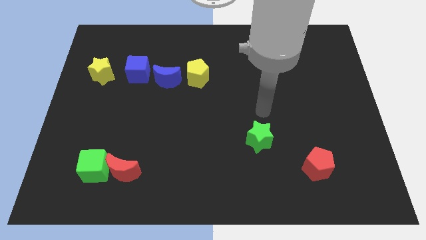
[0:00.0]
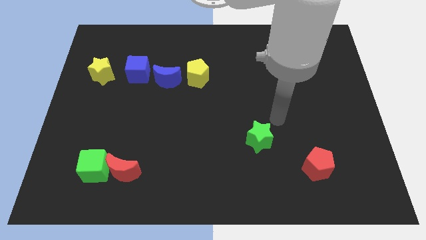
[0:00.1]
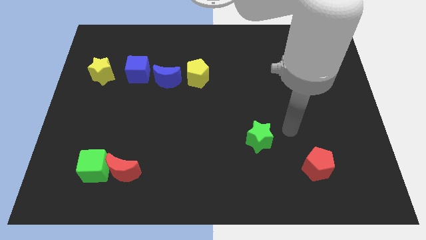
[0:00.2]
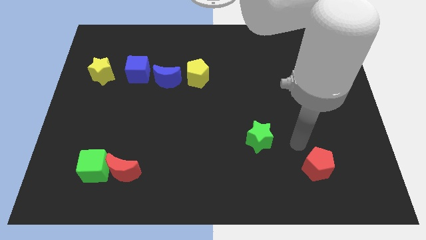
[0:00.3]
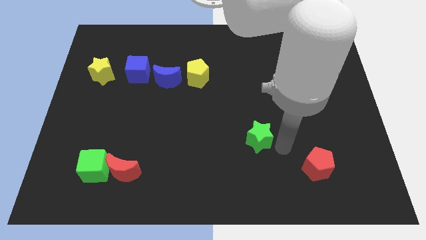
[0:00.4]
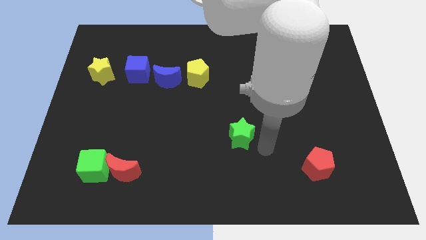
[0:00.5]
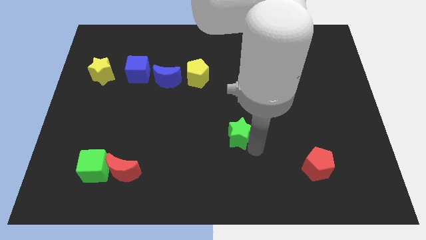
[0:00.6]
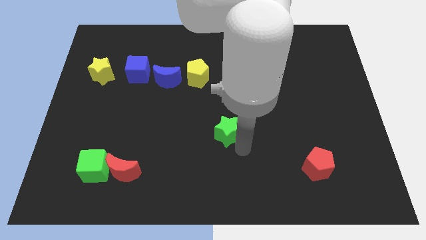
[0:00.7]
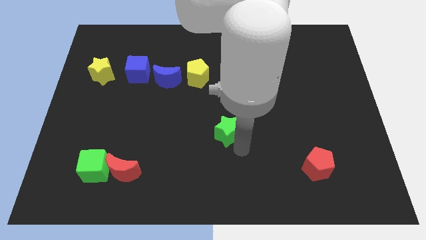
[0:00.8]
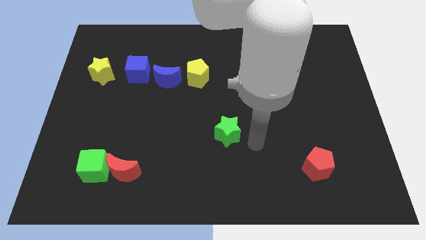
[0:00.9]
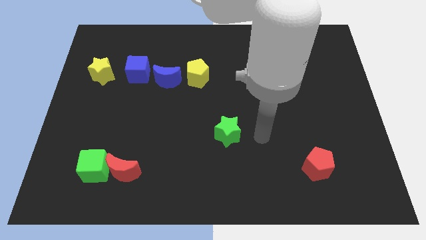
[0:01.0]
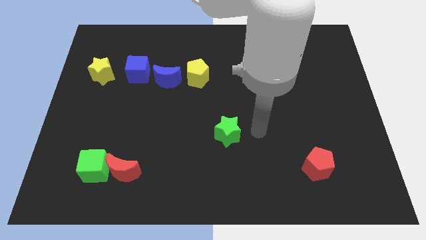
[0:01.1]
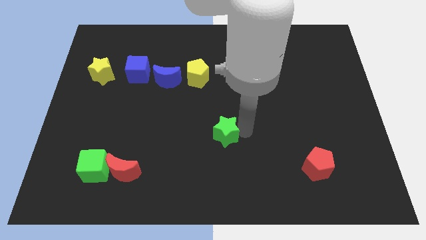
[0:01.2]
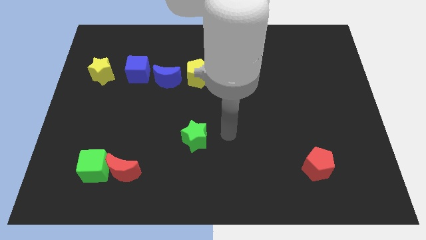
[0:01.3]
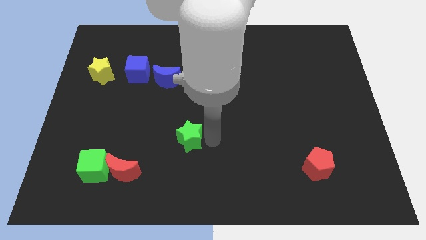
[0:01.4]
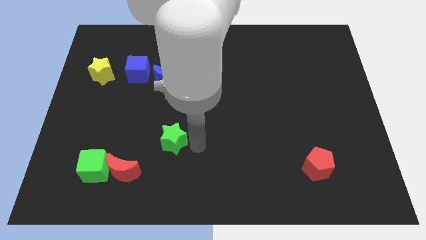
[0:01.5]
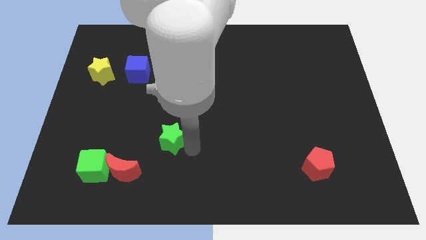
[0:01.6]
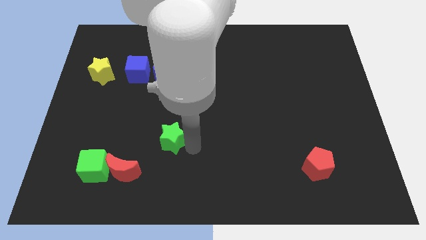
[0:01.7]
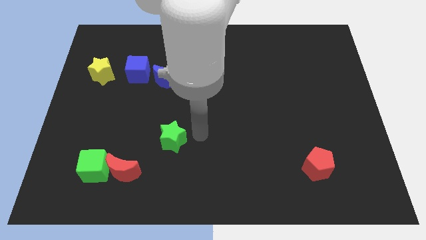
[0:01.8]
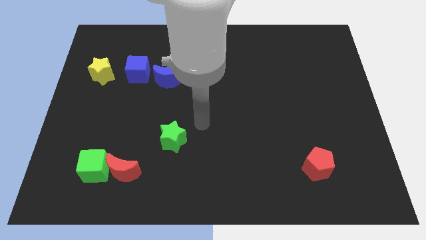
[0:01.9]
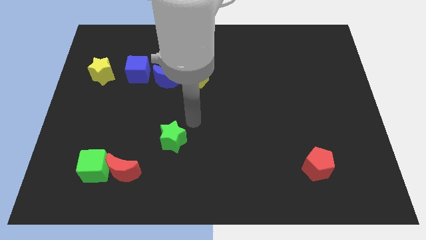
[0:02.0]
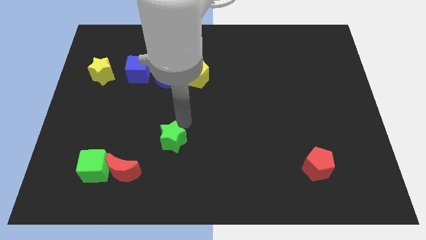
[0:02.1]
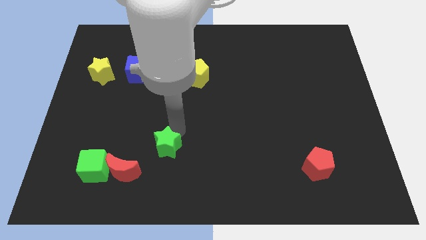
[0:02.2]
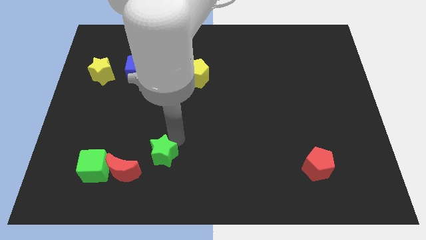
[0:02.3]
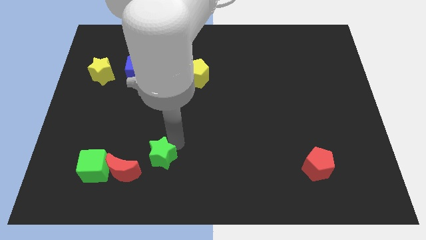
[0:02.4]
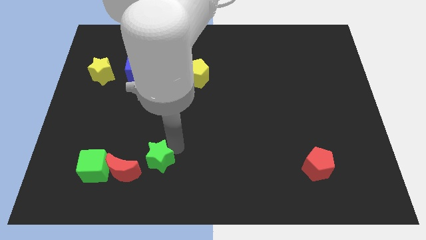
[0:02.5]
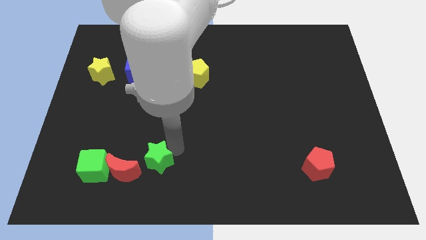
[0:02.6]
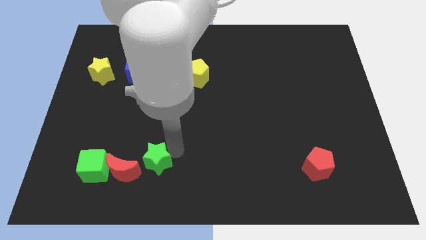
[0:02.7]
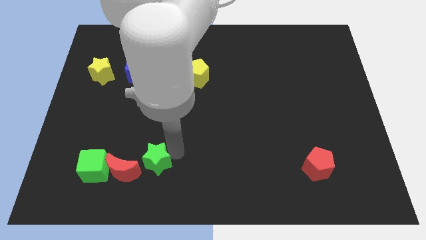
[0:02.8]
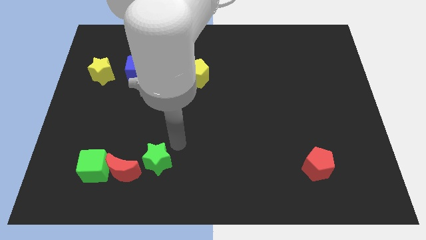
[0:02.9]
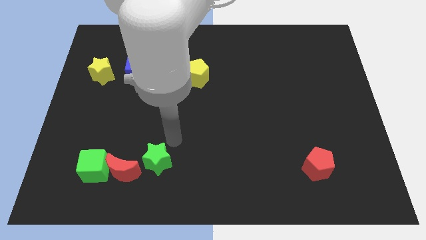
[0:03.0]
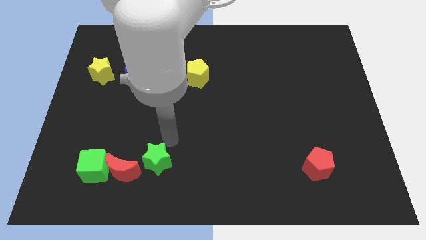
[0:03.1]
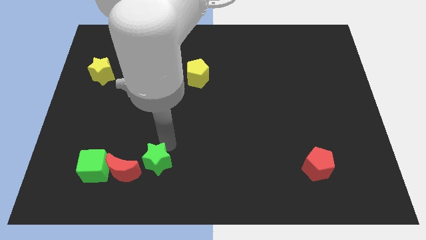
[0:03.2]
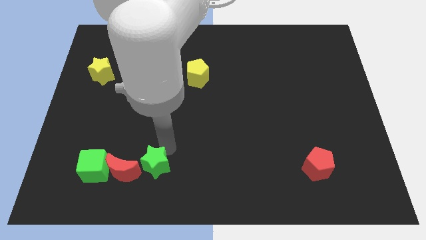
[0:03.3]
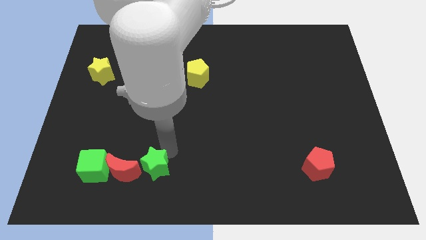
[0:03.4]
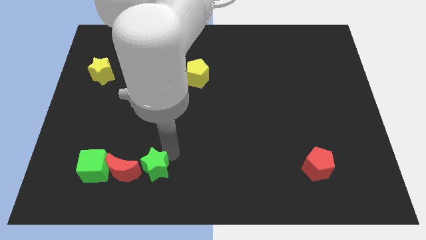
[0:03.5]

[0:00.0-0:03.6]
move the green star to the left side of red crescent

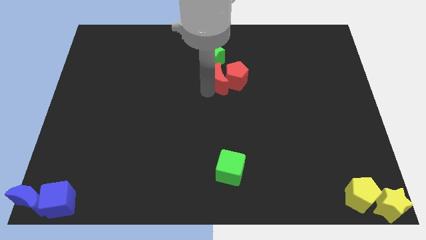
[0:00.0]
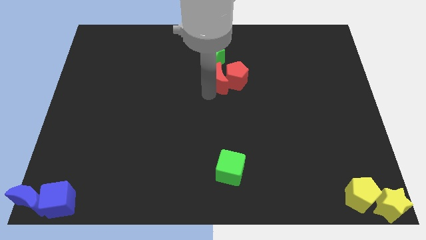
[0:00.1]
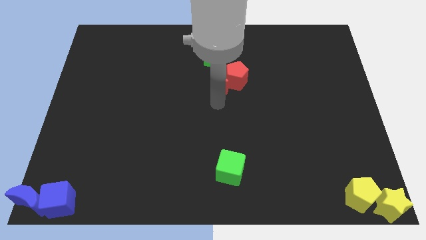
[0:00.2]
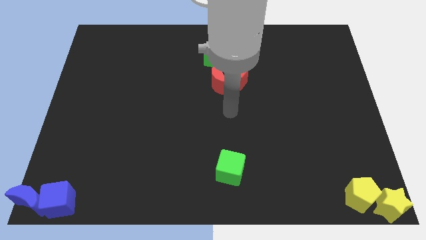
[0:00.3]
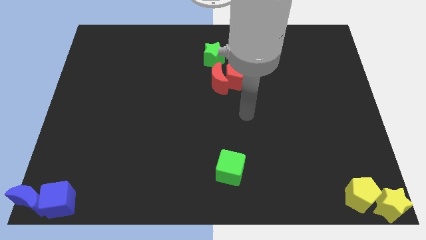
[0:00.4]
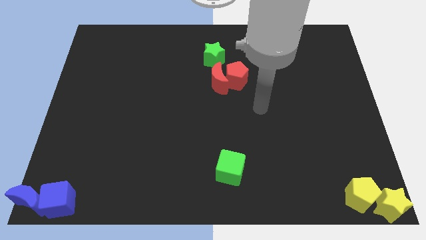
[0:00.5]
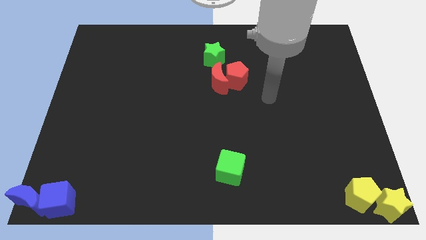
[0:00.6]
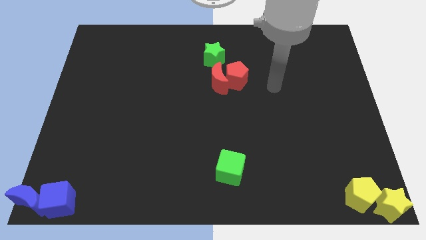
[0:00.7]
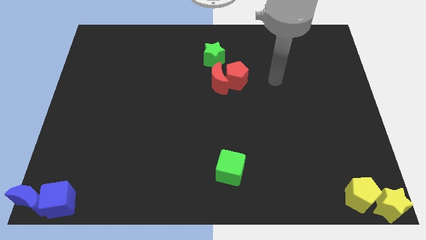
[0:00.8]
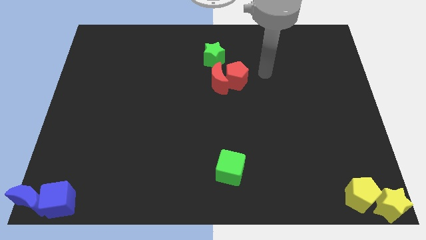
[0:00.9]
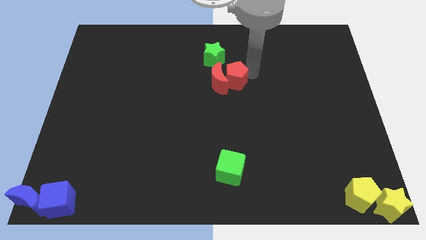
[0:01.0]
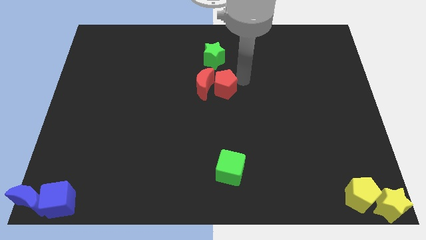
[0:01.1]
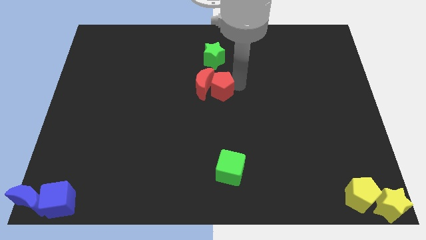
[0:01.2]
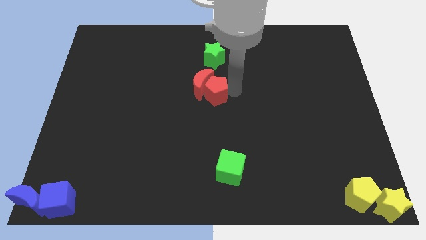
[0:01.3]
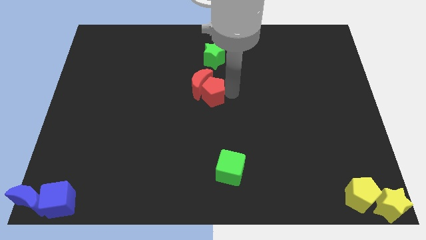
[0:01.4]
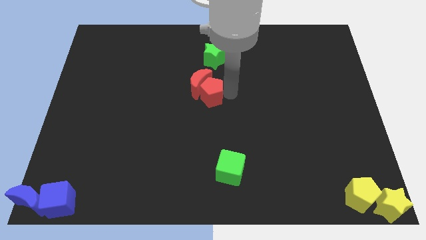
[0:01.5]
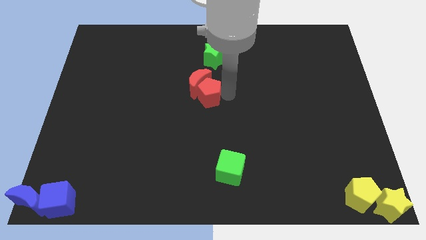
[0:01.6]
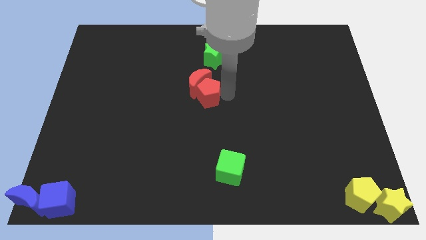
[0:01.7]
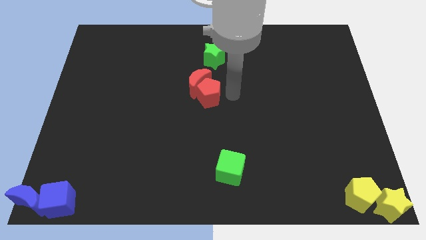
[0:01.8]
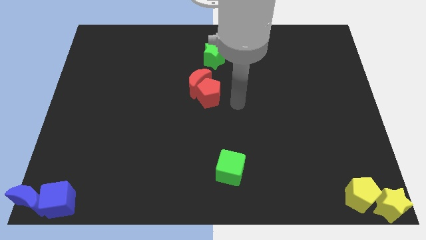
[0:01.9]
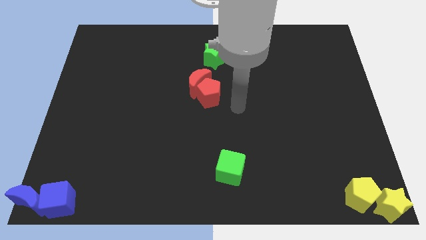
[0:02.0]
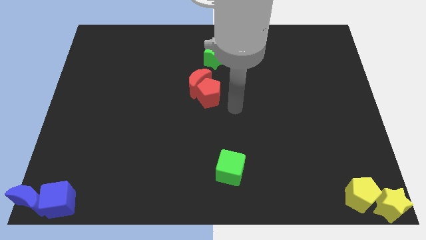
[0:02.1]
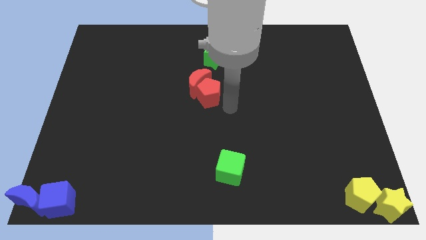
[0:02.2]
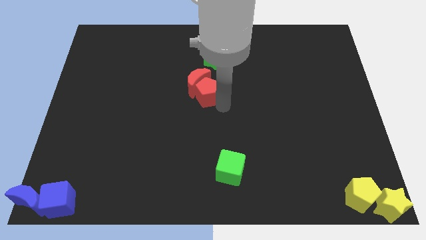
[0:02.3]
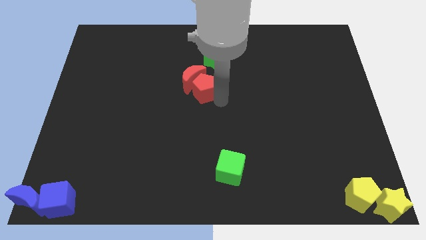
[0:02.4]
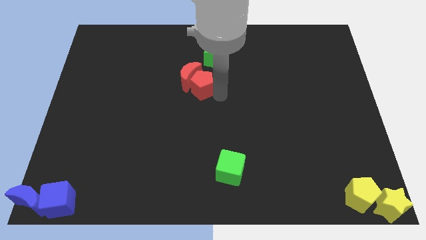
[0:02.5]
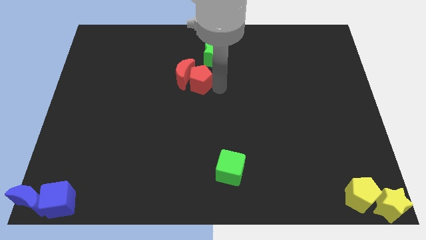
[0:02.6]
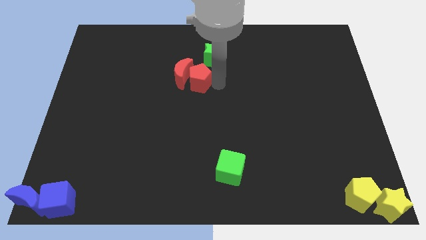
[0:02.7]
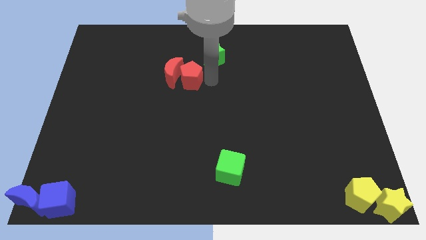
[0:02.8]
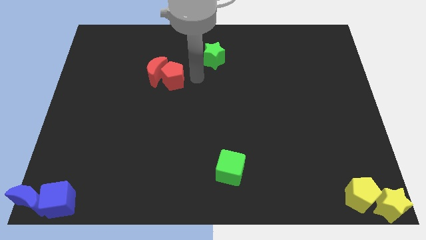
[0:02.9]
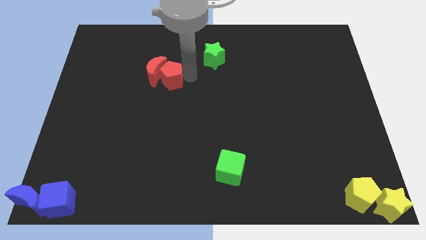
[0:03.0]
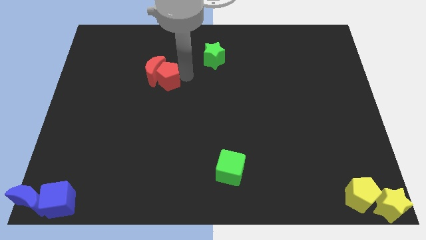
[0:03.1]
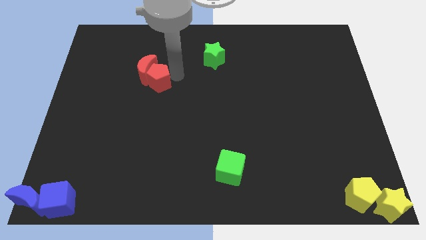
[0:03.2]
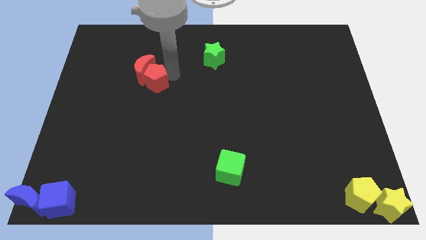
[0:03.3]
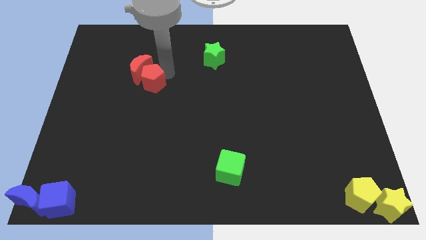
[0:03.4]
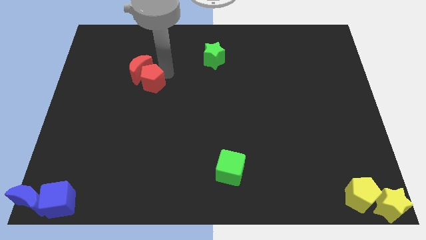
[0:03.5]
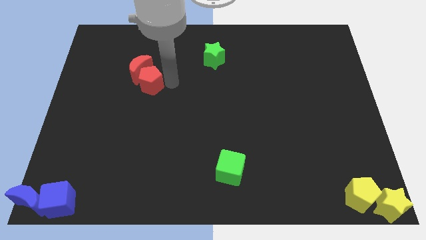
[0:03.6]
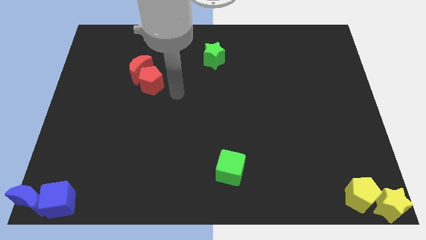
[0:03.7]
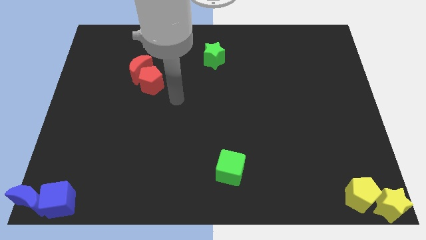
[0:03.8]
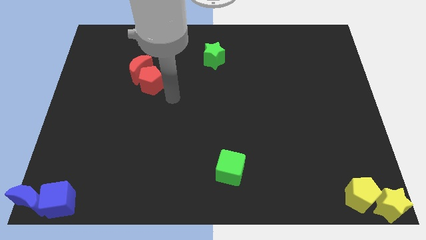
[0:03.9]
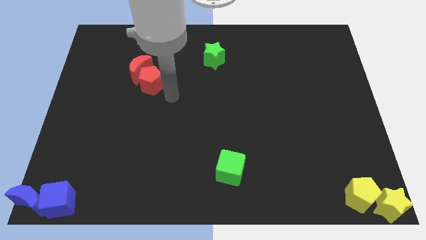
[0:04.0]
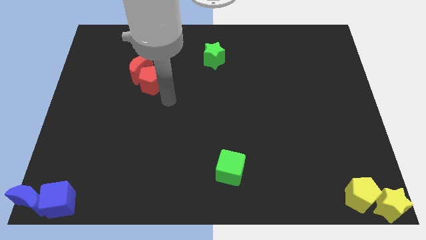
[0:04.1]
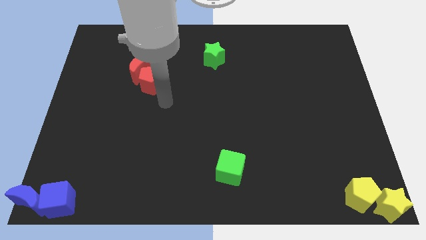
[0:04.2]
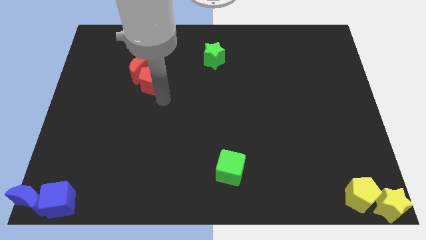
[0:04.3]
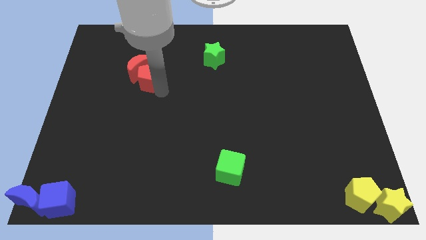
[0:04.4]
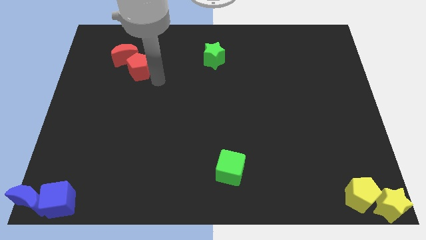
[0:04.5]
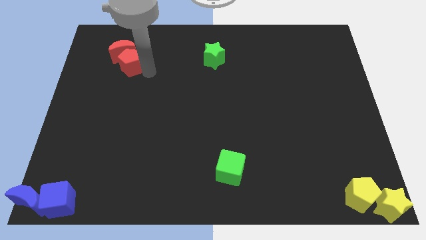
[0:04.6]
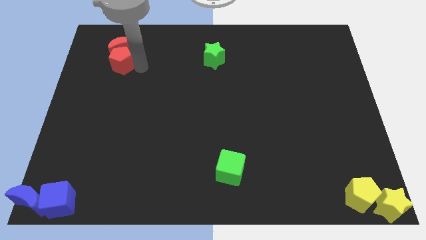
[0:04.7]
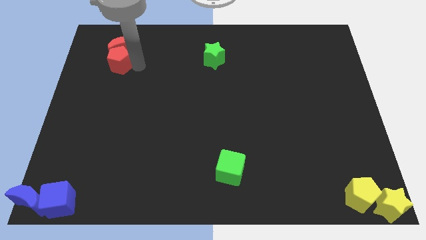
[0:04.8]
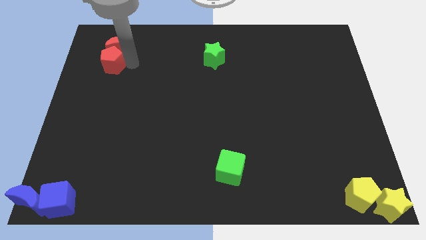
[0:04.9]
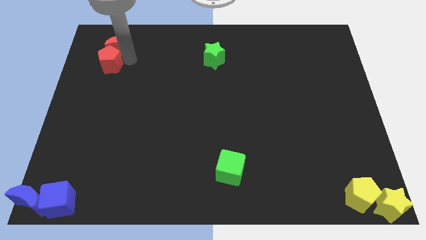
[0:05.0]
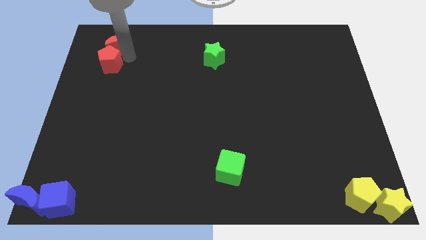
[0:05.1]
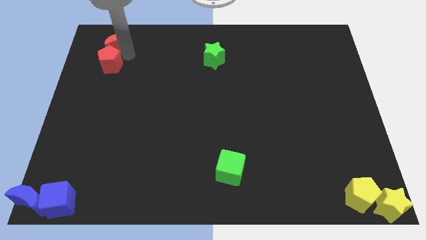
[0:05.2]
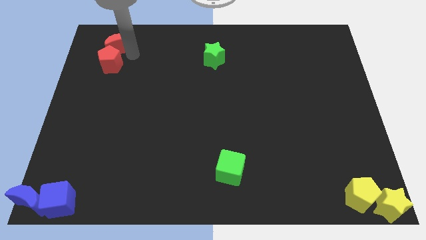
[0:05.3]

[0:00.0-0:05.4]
push the red blocks left to the green star
